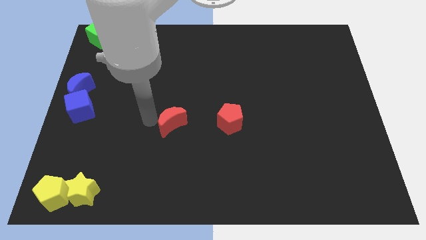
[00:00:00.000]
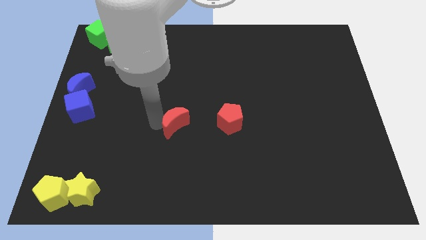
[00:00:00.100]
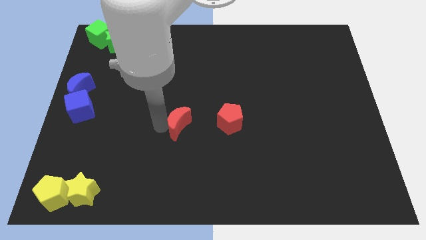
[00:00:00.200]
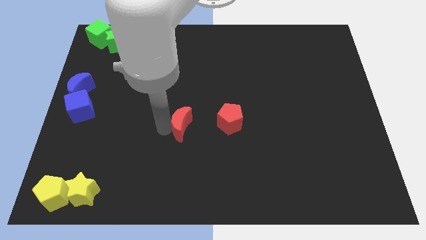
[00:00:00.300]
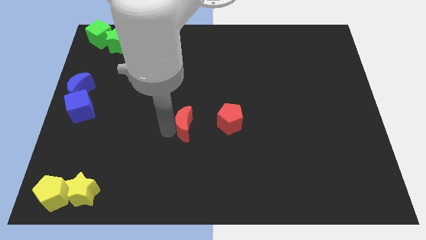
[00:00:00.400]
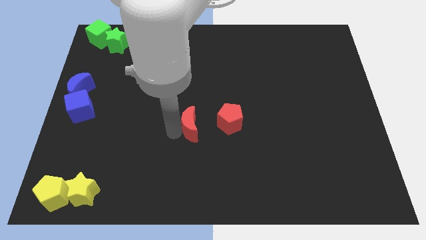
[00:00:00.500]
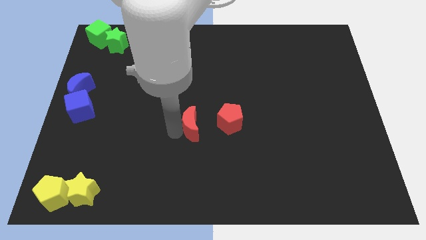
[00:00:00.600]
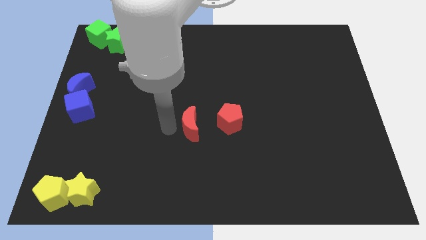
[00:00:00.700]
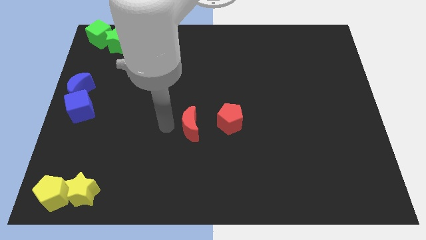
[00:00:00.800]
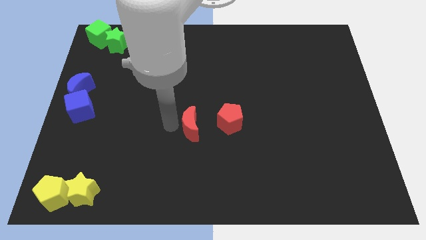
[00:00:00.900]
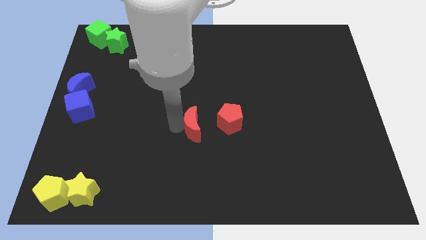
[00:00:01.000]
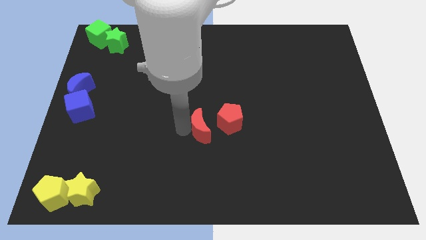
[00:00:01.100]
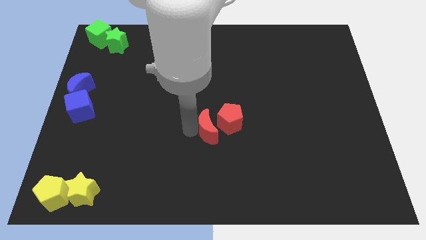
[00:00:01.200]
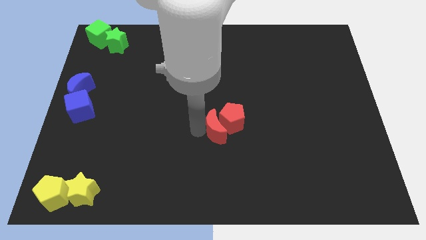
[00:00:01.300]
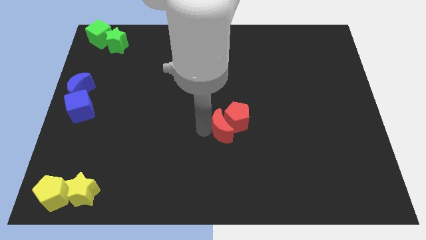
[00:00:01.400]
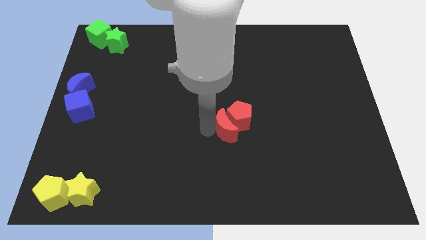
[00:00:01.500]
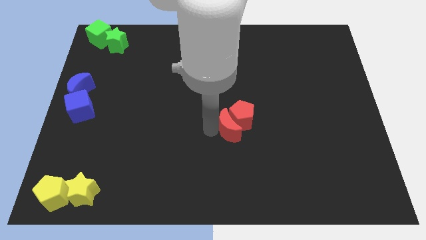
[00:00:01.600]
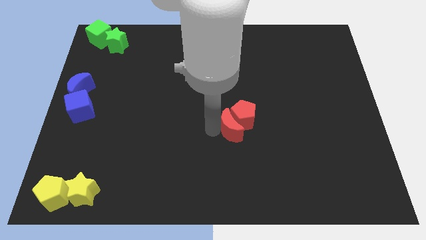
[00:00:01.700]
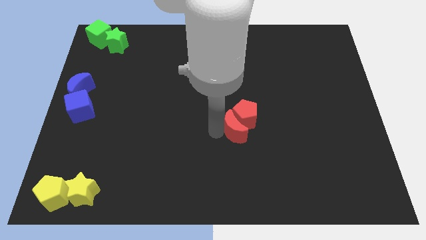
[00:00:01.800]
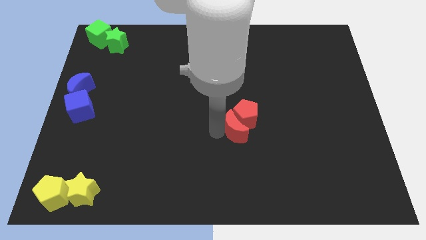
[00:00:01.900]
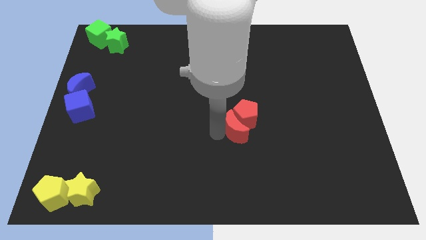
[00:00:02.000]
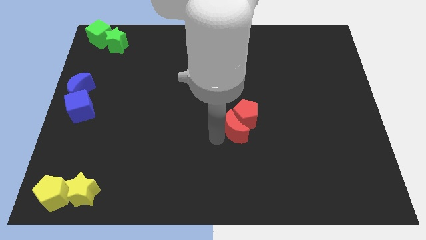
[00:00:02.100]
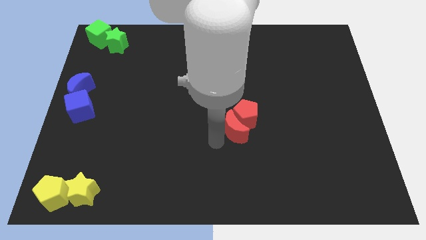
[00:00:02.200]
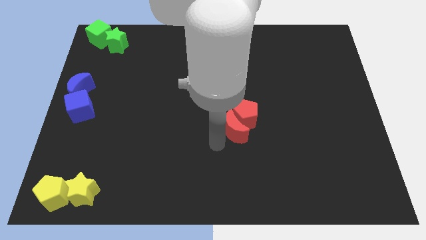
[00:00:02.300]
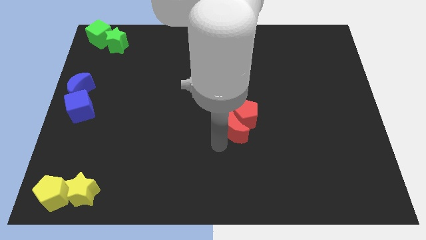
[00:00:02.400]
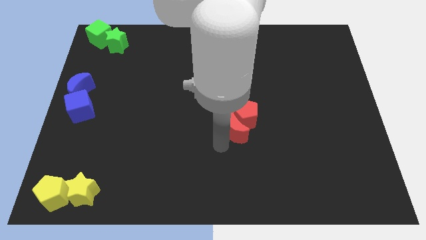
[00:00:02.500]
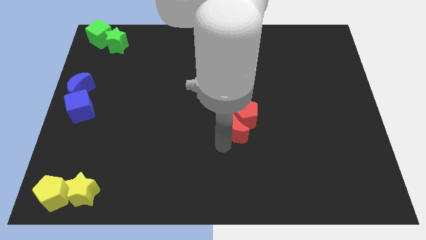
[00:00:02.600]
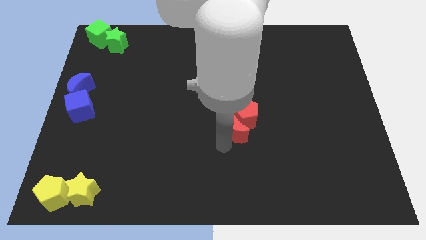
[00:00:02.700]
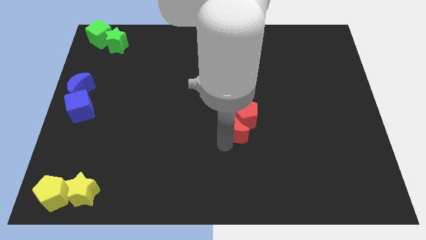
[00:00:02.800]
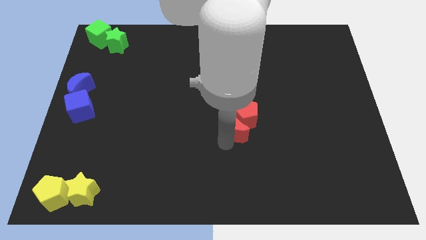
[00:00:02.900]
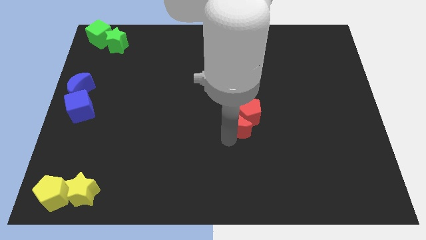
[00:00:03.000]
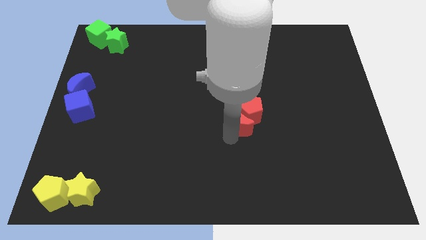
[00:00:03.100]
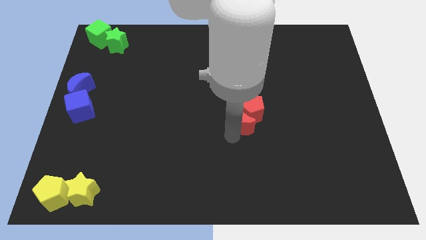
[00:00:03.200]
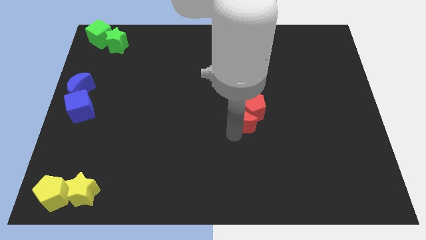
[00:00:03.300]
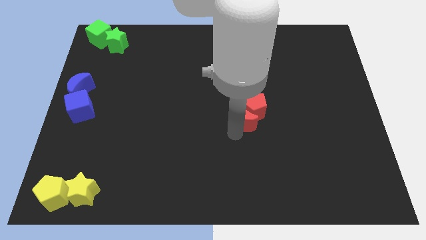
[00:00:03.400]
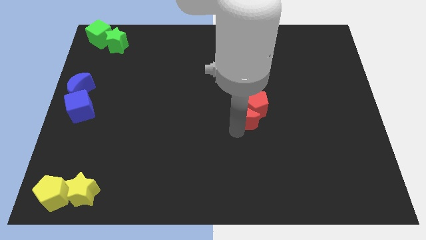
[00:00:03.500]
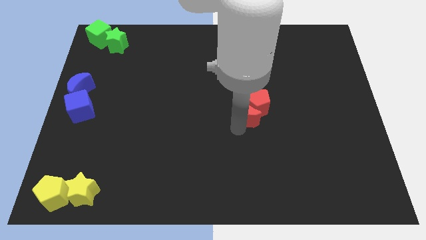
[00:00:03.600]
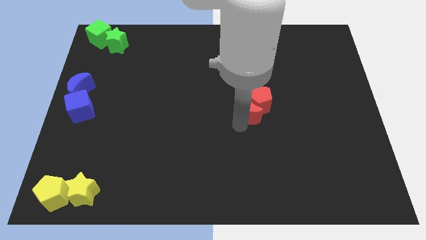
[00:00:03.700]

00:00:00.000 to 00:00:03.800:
push the red crescent diagonally to the left bottom of the red pentagon

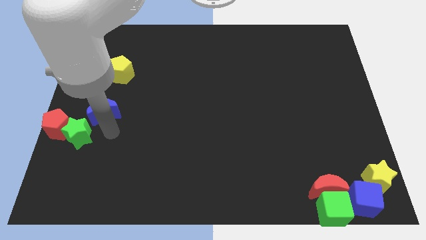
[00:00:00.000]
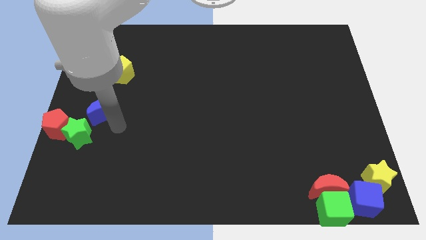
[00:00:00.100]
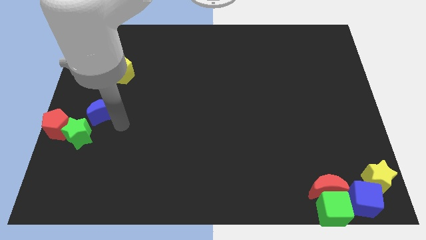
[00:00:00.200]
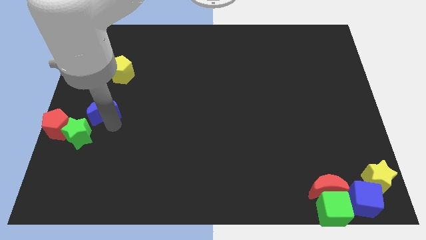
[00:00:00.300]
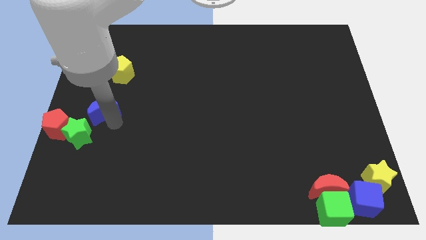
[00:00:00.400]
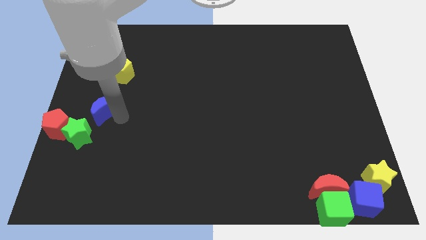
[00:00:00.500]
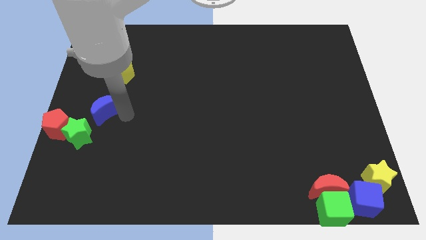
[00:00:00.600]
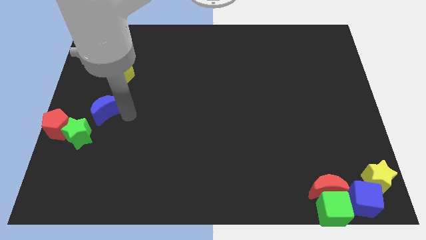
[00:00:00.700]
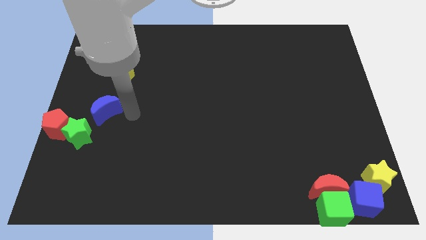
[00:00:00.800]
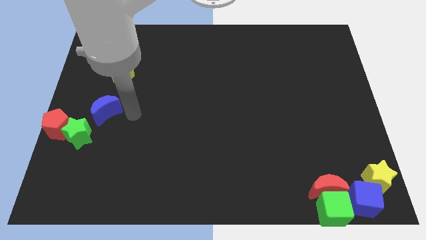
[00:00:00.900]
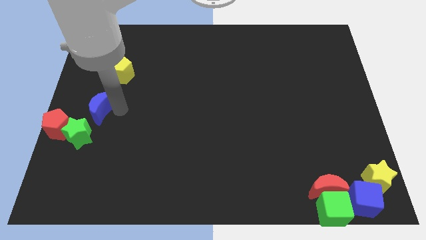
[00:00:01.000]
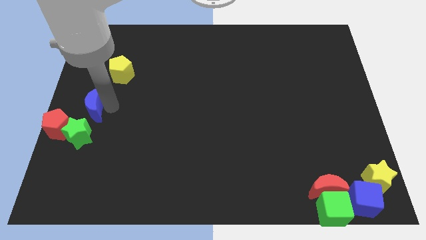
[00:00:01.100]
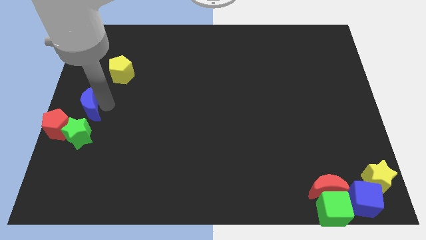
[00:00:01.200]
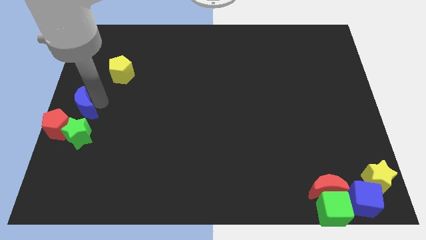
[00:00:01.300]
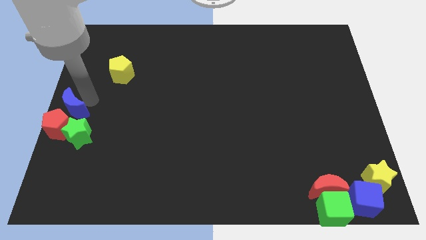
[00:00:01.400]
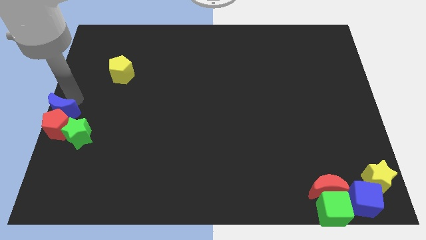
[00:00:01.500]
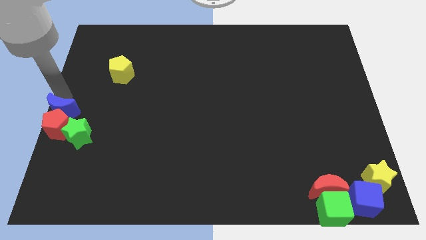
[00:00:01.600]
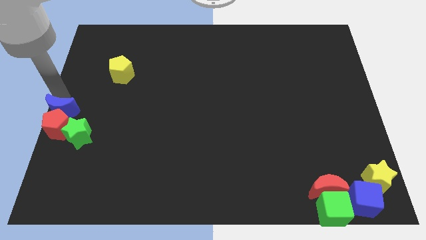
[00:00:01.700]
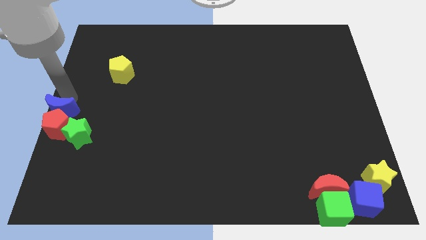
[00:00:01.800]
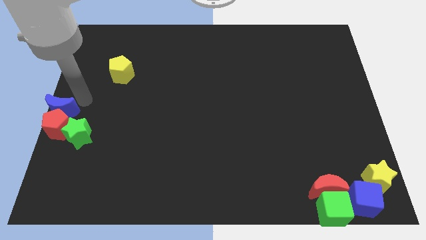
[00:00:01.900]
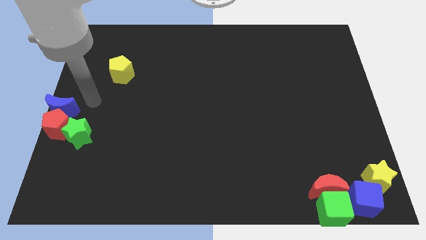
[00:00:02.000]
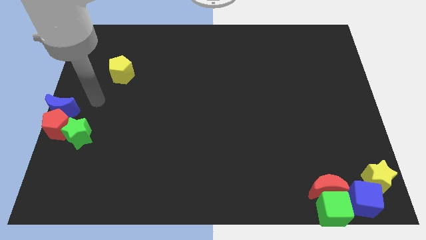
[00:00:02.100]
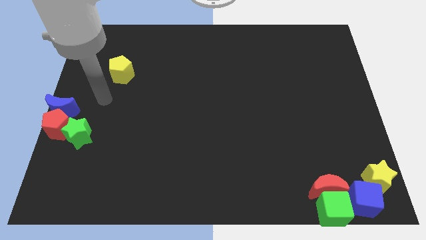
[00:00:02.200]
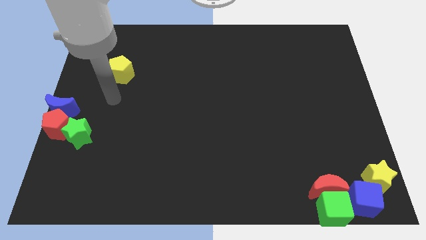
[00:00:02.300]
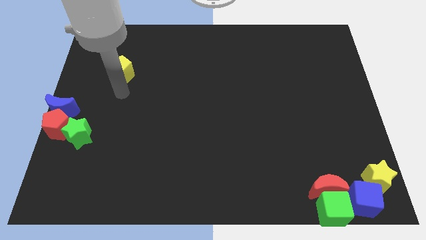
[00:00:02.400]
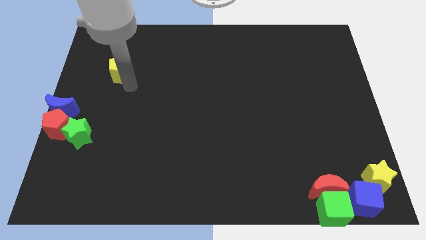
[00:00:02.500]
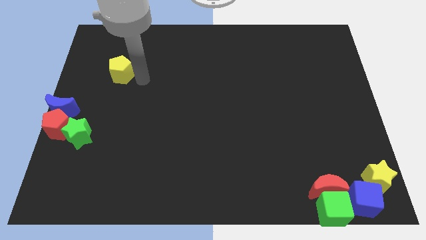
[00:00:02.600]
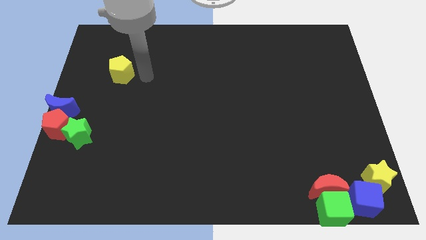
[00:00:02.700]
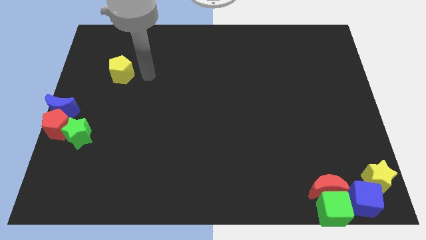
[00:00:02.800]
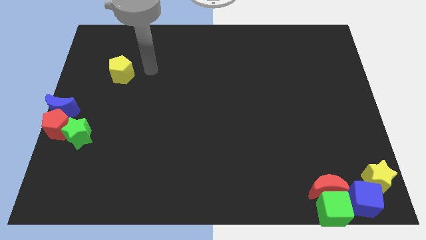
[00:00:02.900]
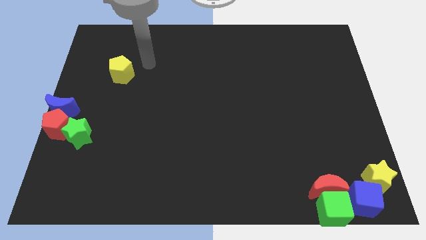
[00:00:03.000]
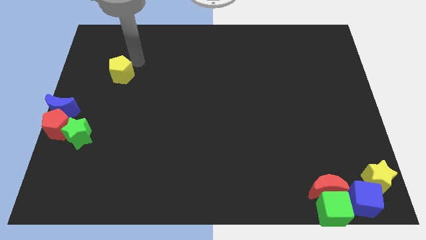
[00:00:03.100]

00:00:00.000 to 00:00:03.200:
place blue moon into the left center of the board

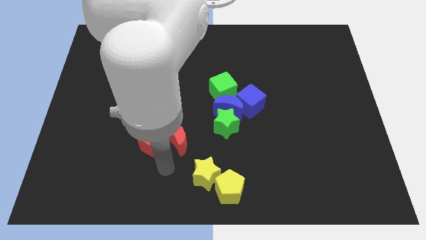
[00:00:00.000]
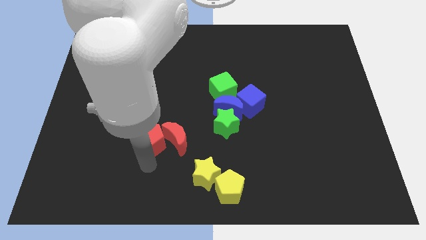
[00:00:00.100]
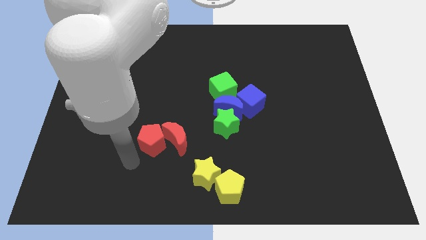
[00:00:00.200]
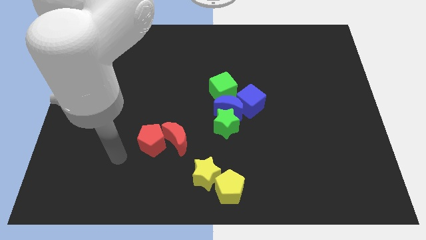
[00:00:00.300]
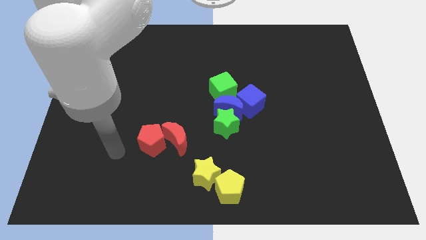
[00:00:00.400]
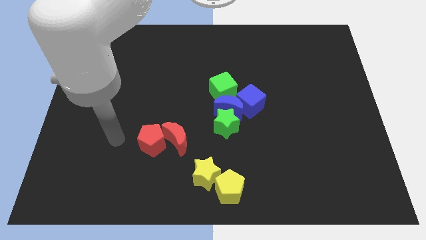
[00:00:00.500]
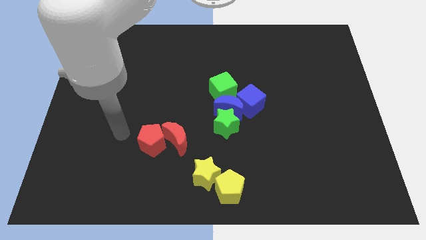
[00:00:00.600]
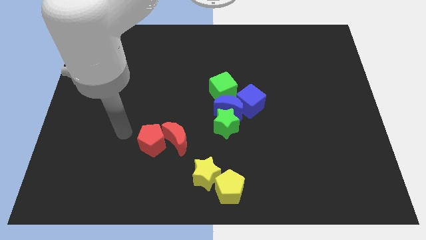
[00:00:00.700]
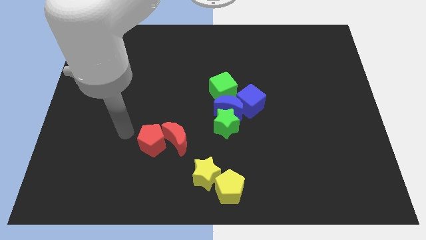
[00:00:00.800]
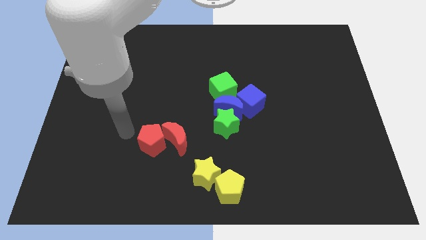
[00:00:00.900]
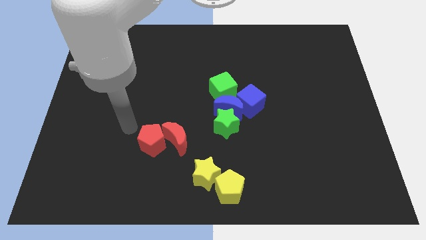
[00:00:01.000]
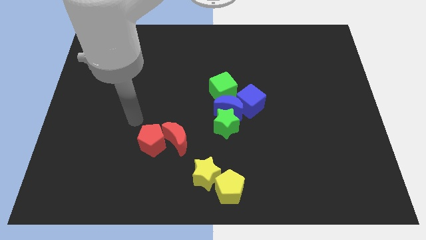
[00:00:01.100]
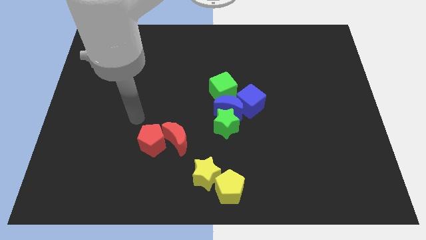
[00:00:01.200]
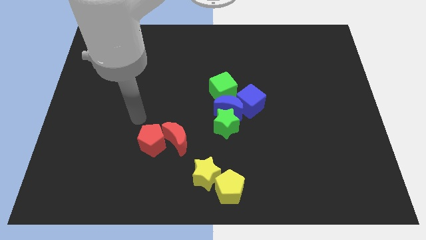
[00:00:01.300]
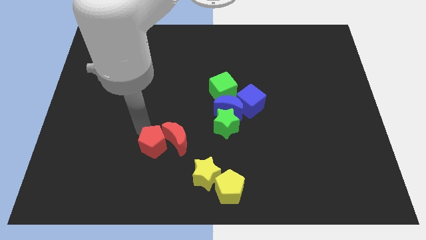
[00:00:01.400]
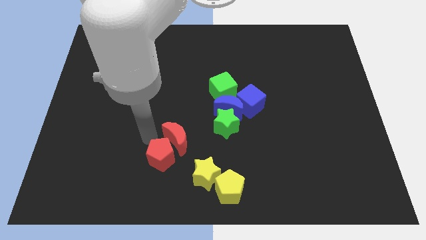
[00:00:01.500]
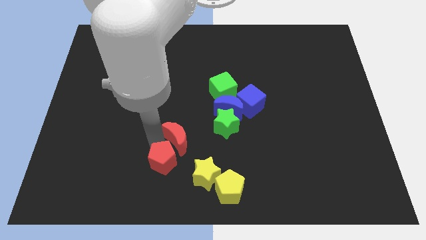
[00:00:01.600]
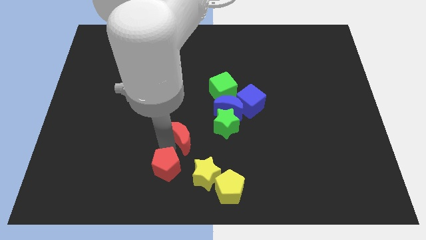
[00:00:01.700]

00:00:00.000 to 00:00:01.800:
push the red pentagon down slightly
